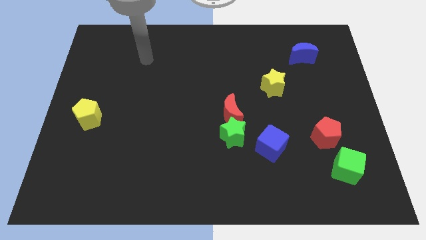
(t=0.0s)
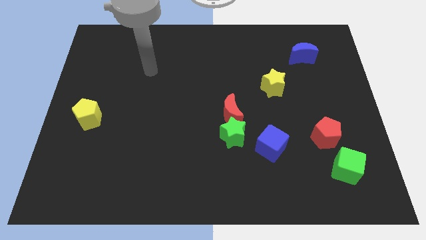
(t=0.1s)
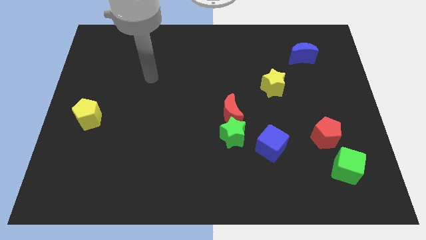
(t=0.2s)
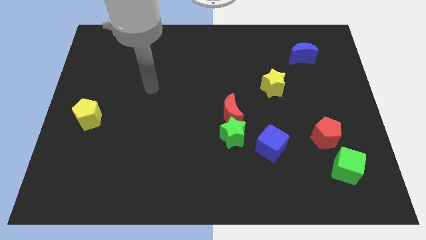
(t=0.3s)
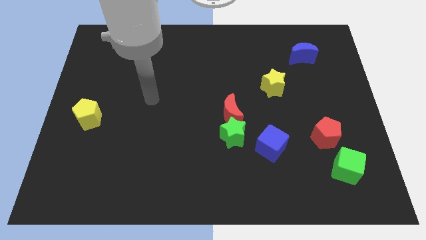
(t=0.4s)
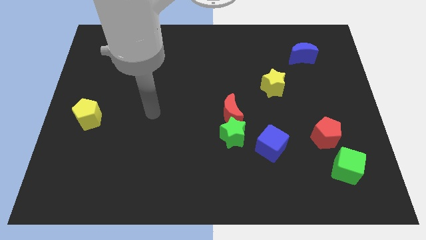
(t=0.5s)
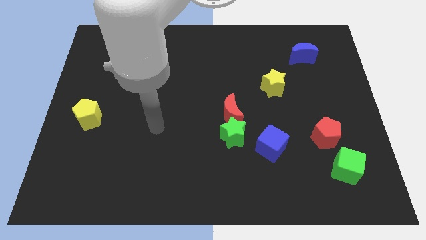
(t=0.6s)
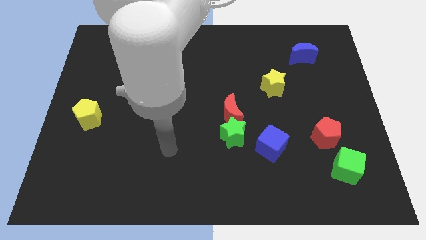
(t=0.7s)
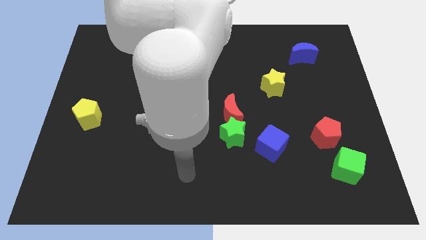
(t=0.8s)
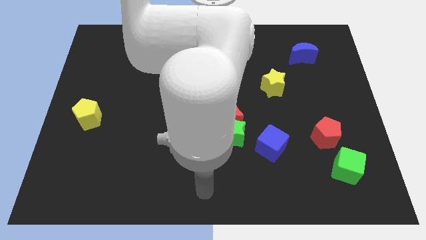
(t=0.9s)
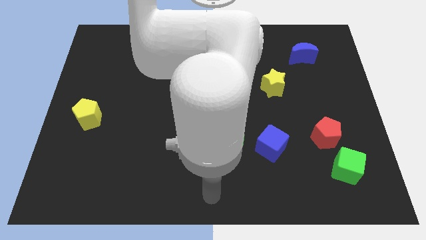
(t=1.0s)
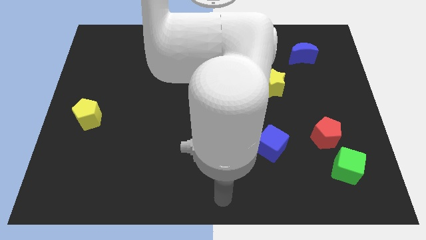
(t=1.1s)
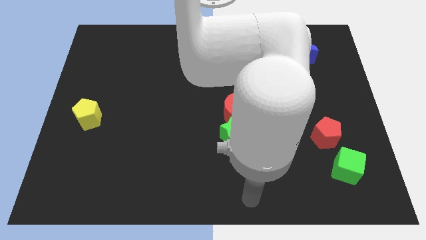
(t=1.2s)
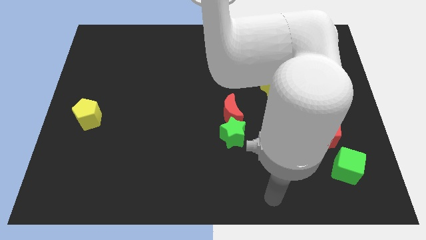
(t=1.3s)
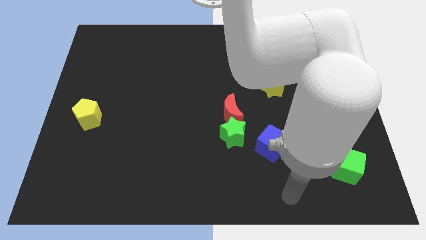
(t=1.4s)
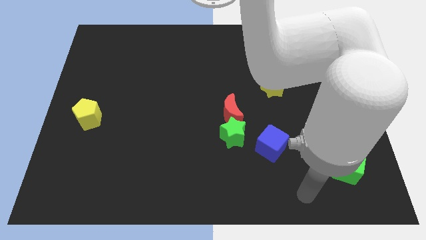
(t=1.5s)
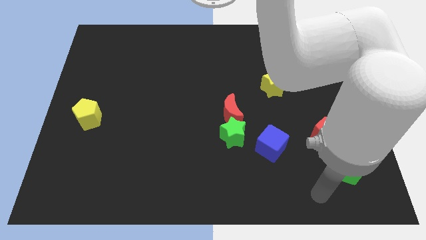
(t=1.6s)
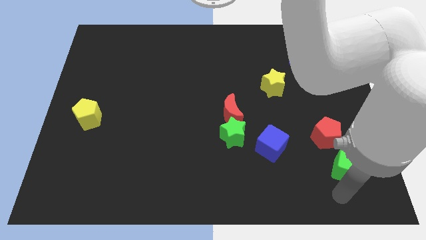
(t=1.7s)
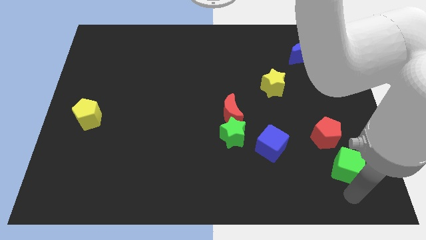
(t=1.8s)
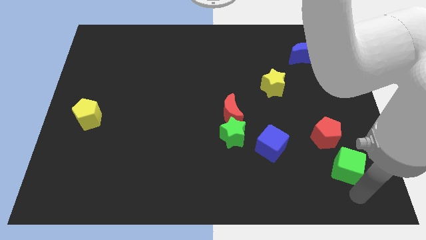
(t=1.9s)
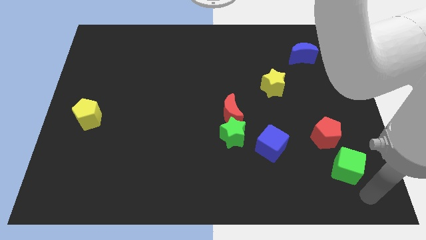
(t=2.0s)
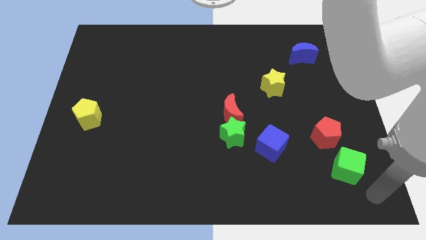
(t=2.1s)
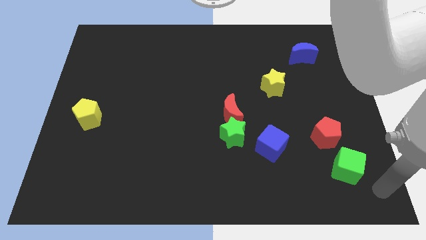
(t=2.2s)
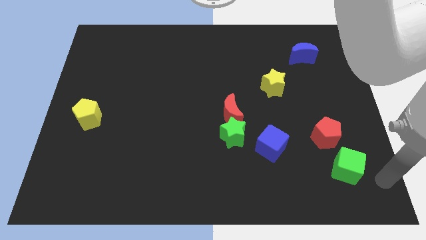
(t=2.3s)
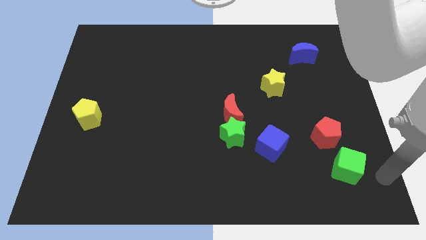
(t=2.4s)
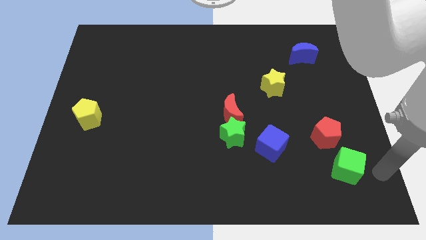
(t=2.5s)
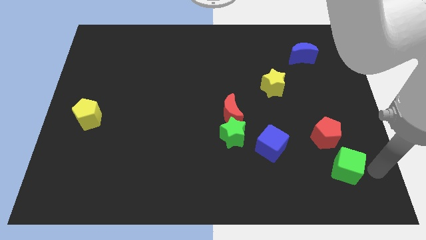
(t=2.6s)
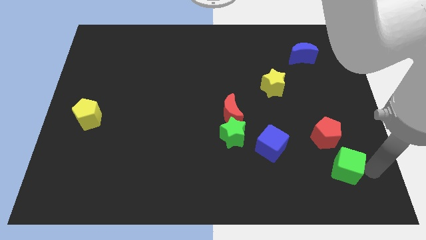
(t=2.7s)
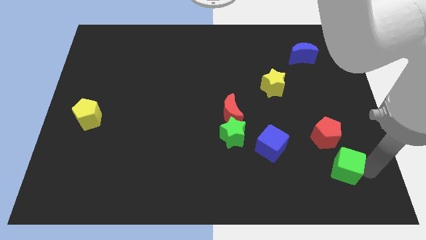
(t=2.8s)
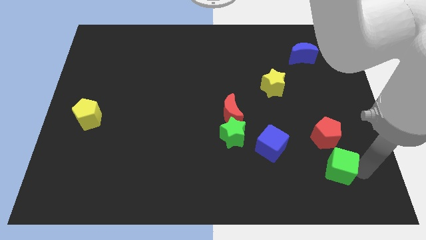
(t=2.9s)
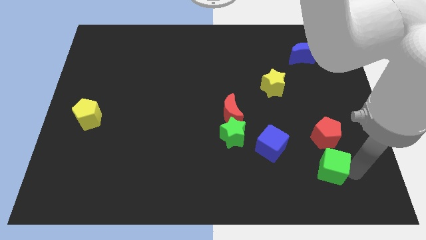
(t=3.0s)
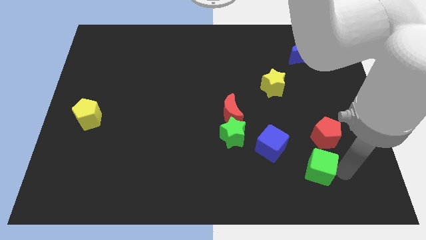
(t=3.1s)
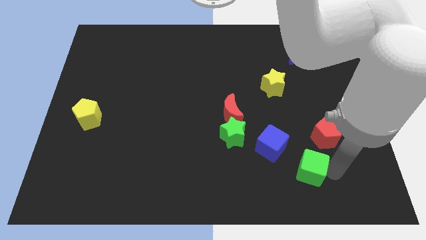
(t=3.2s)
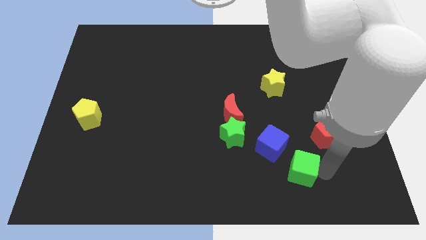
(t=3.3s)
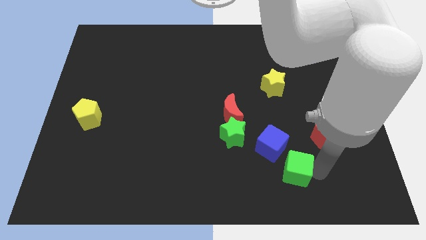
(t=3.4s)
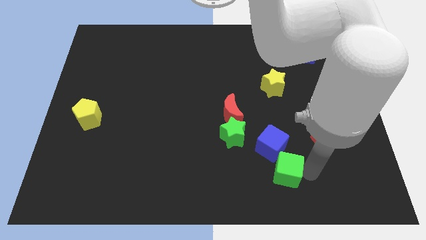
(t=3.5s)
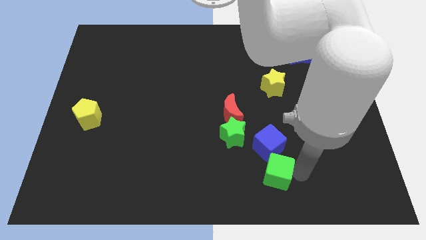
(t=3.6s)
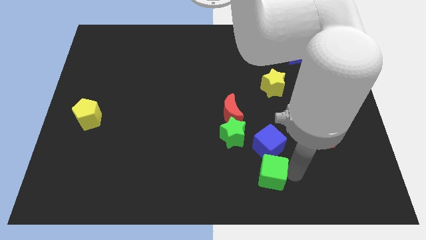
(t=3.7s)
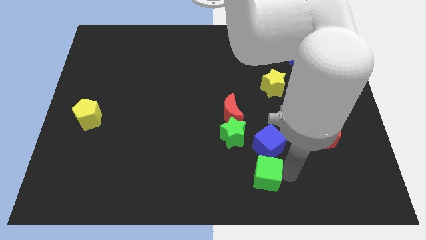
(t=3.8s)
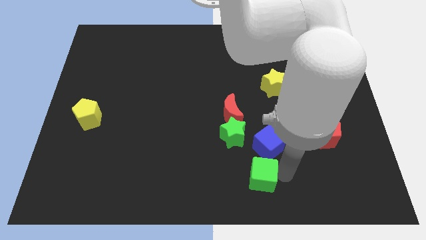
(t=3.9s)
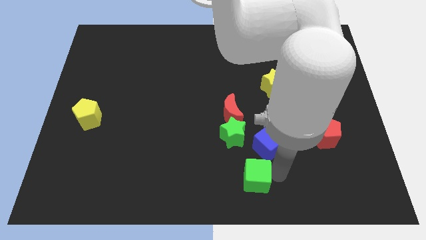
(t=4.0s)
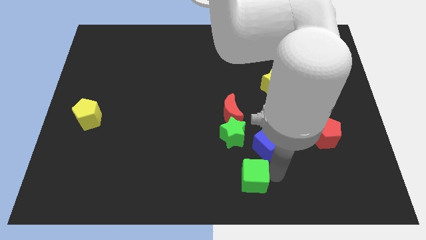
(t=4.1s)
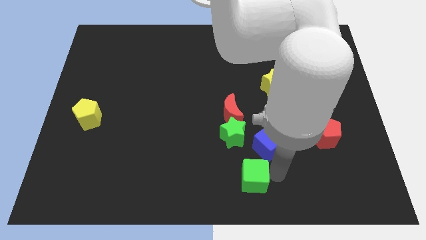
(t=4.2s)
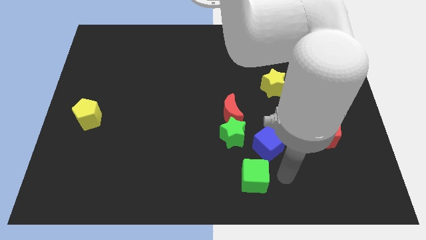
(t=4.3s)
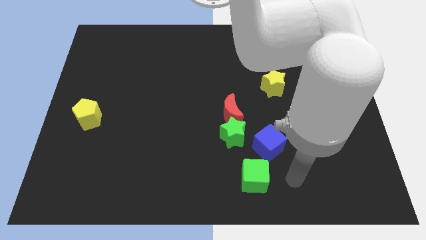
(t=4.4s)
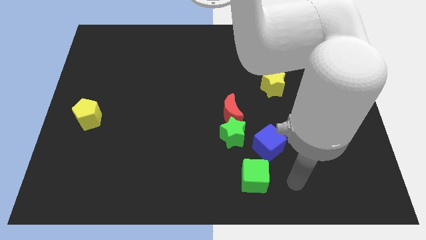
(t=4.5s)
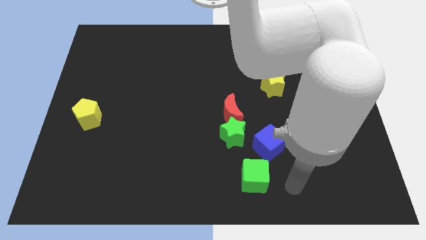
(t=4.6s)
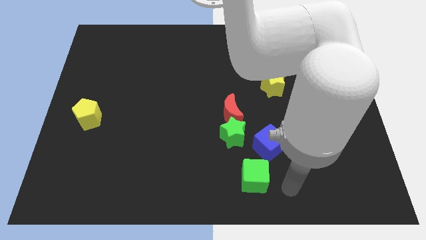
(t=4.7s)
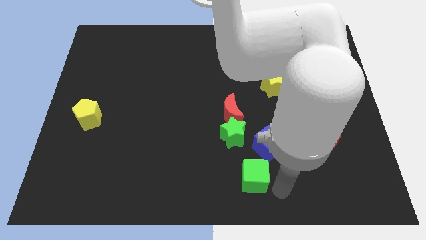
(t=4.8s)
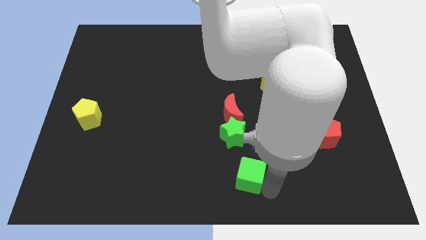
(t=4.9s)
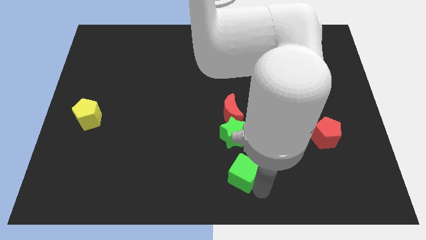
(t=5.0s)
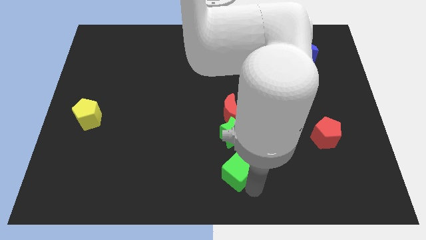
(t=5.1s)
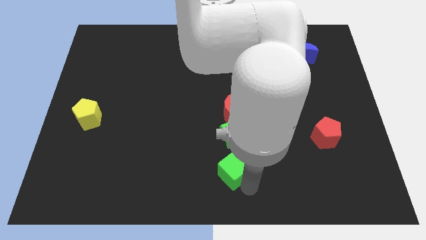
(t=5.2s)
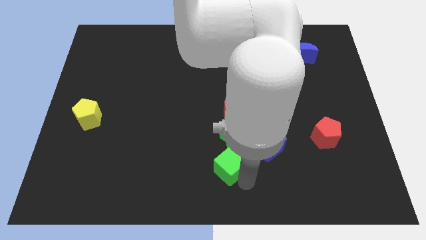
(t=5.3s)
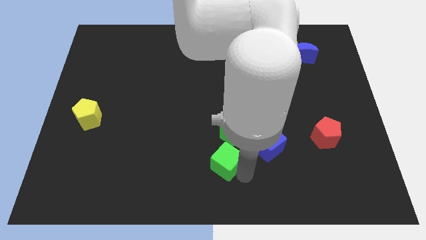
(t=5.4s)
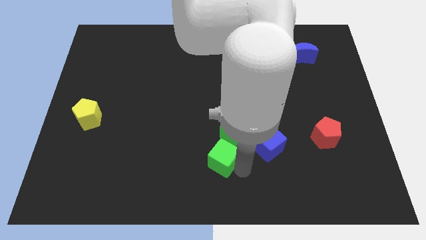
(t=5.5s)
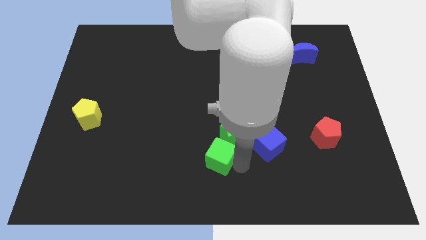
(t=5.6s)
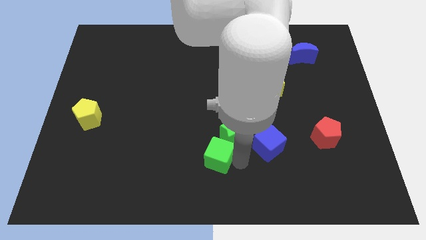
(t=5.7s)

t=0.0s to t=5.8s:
put the green cube close to the green star

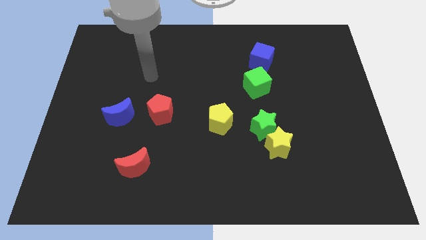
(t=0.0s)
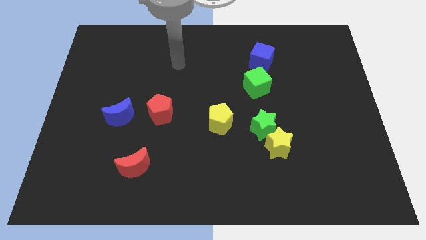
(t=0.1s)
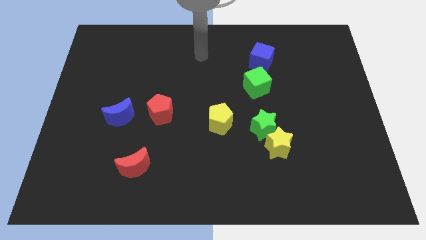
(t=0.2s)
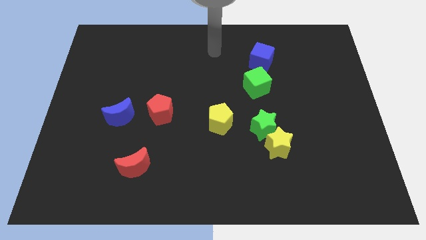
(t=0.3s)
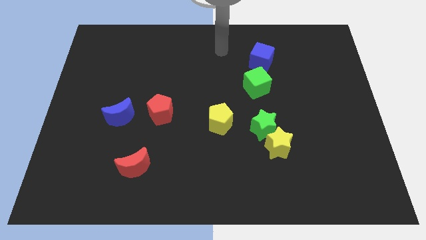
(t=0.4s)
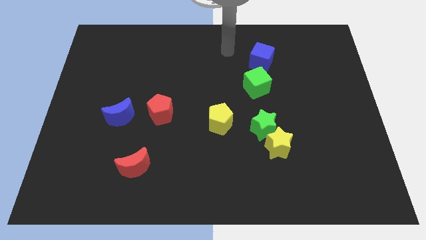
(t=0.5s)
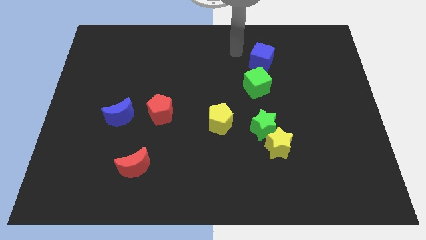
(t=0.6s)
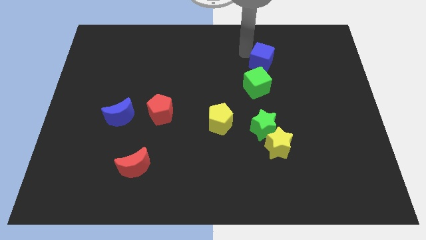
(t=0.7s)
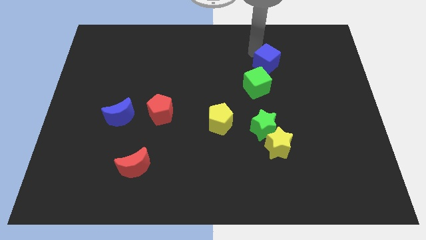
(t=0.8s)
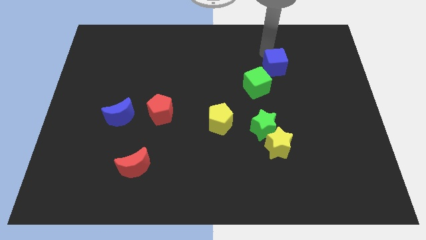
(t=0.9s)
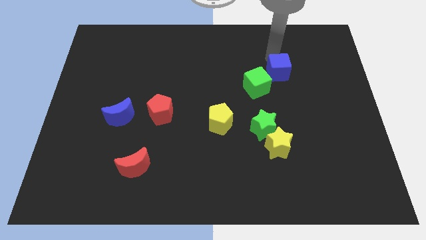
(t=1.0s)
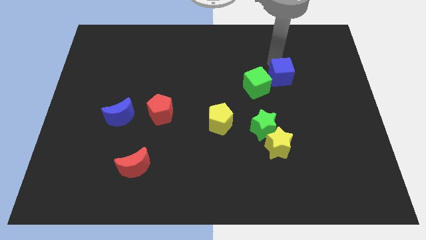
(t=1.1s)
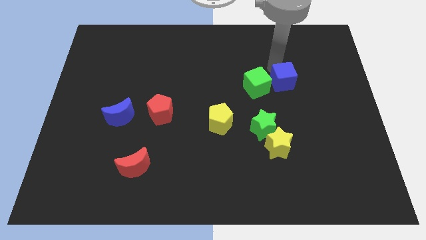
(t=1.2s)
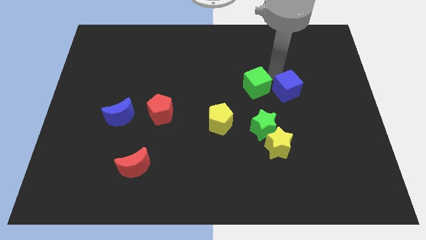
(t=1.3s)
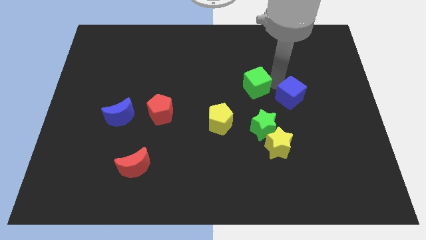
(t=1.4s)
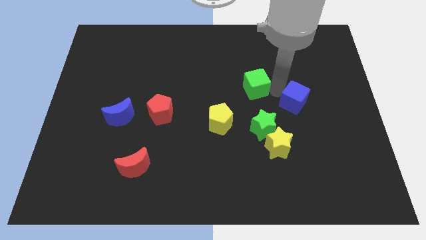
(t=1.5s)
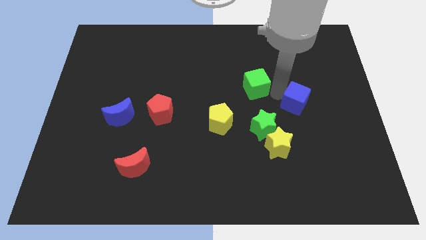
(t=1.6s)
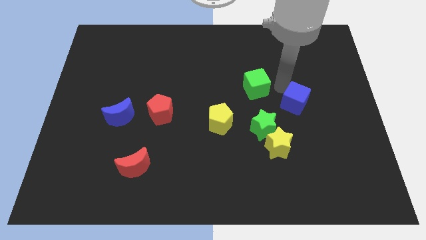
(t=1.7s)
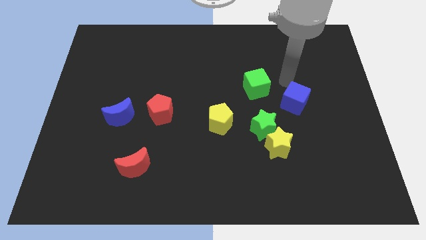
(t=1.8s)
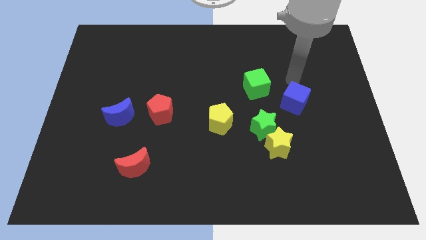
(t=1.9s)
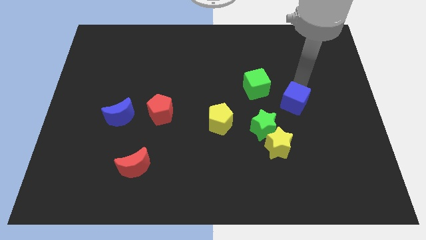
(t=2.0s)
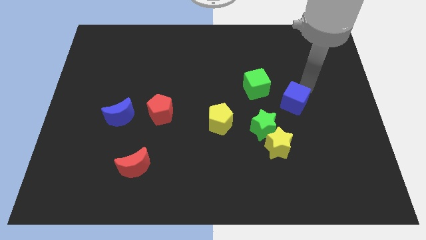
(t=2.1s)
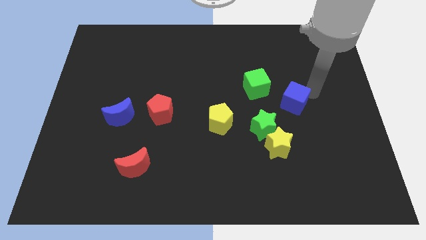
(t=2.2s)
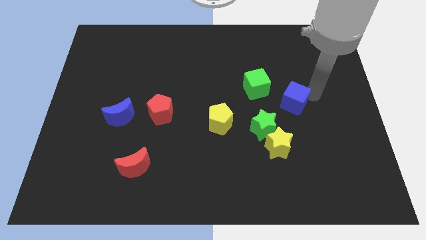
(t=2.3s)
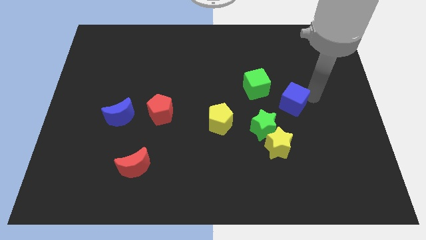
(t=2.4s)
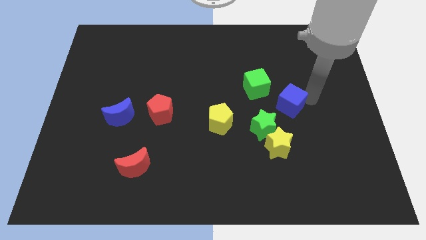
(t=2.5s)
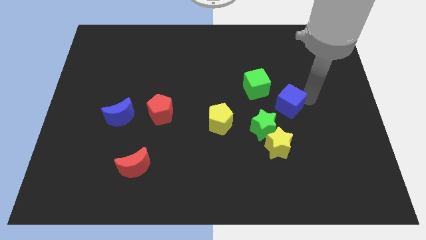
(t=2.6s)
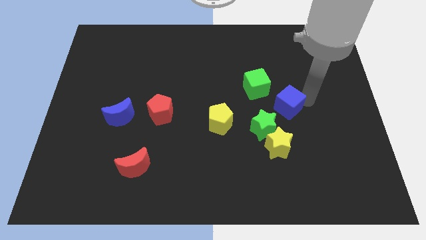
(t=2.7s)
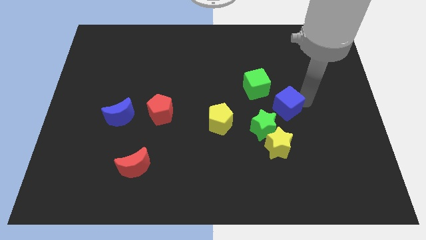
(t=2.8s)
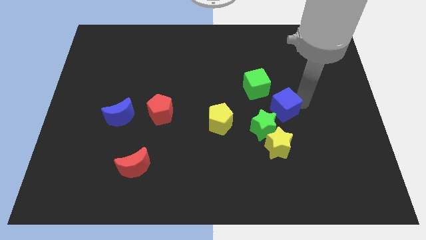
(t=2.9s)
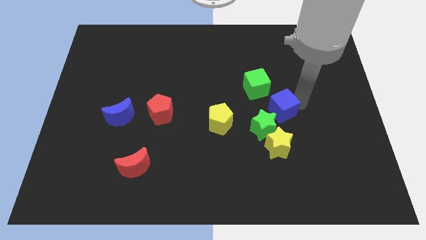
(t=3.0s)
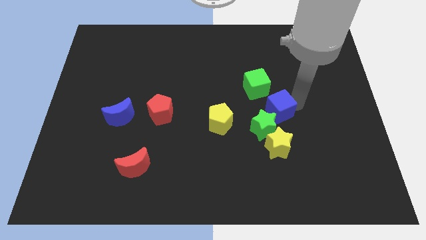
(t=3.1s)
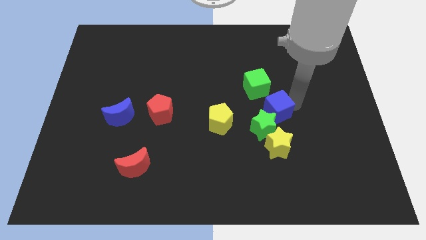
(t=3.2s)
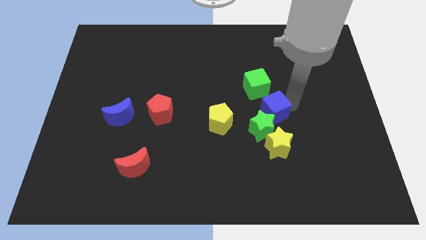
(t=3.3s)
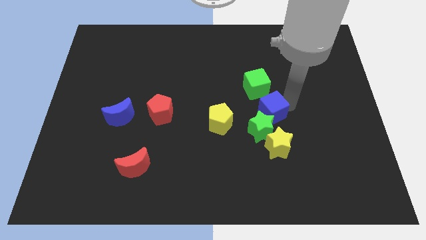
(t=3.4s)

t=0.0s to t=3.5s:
slide the blue cube next to the green star
